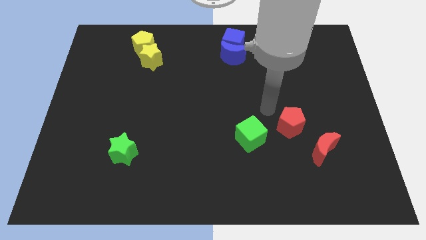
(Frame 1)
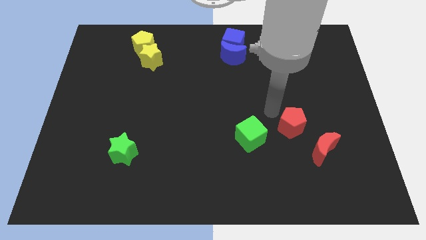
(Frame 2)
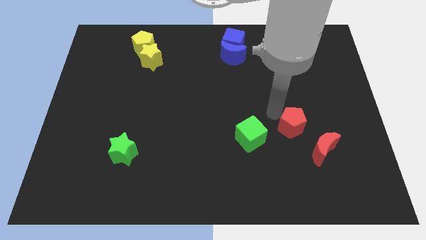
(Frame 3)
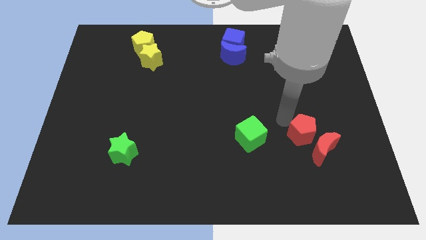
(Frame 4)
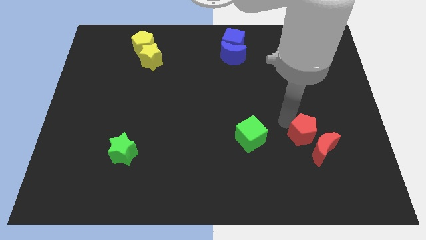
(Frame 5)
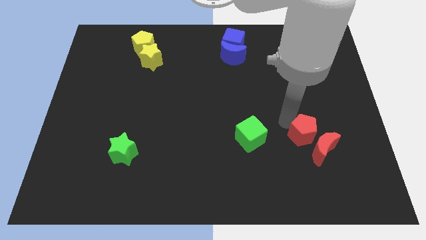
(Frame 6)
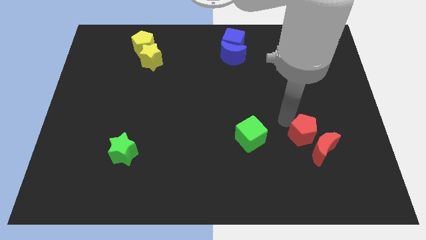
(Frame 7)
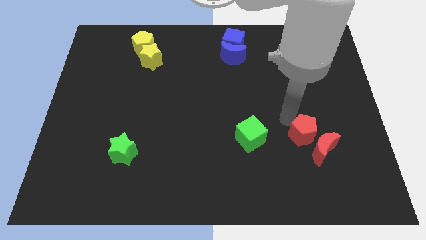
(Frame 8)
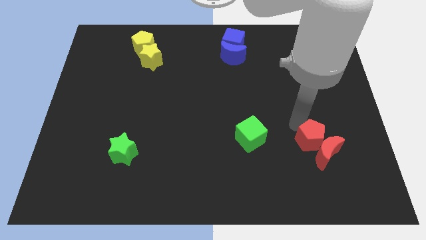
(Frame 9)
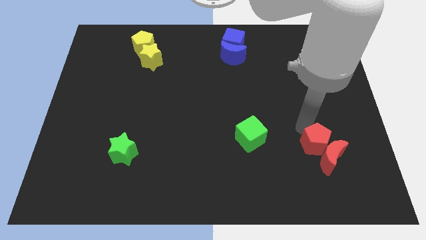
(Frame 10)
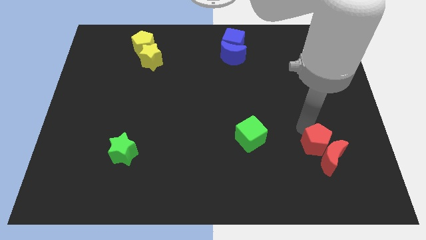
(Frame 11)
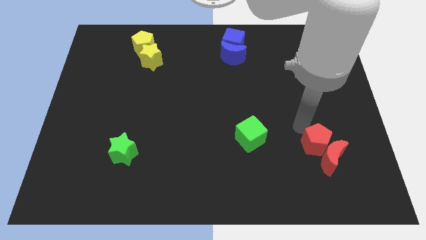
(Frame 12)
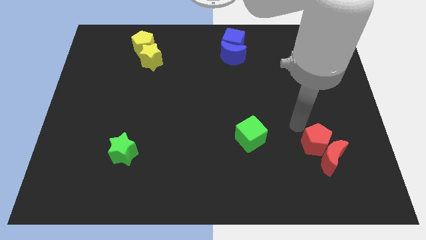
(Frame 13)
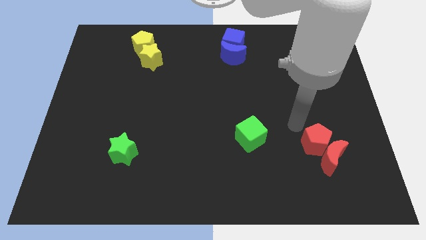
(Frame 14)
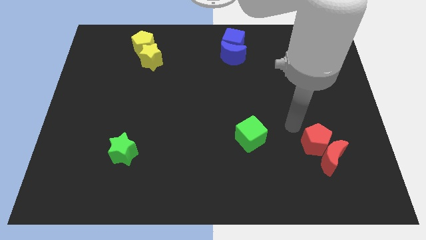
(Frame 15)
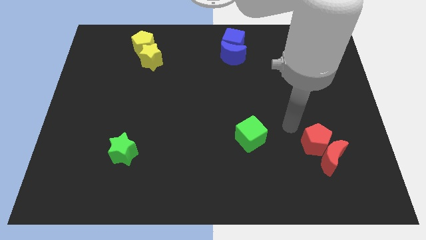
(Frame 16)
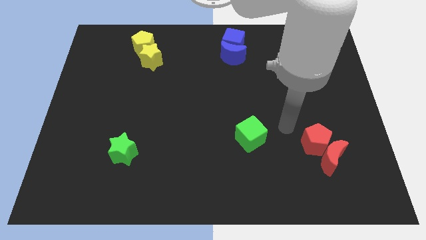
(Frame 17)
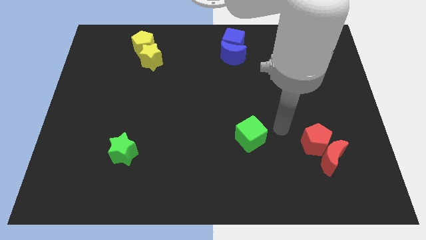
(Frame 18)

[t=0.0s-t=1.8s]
move red pentagon into the red moon

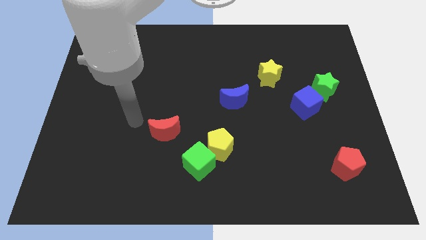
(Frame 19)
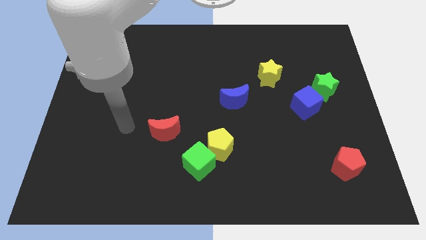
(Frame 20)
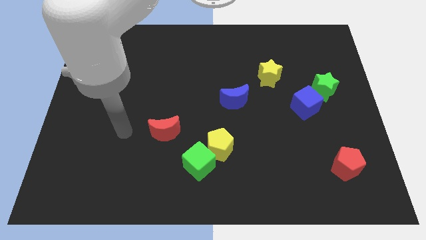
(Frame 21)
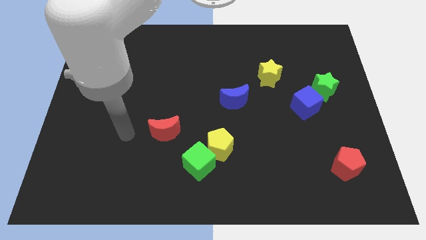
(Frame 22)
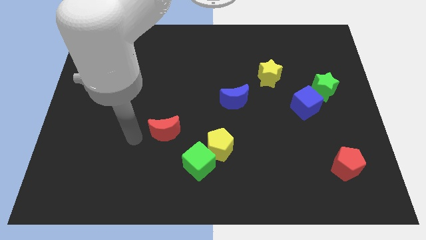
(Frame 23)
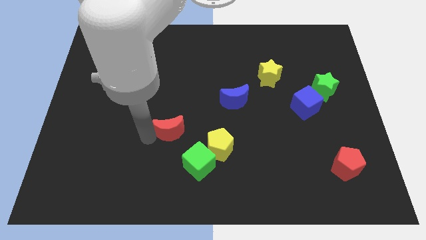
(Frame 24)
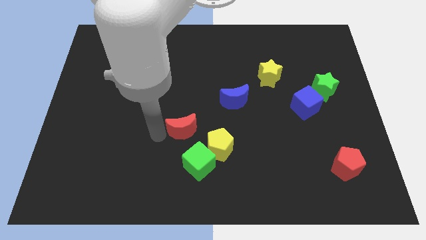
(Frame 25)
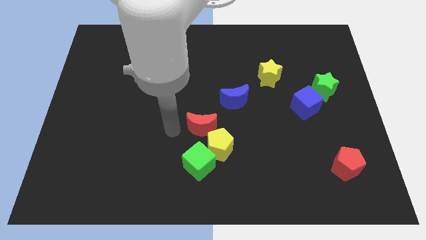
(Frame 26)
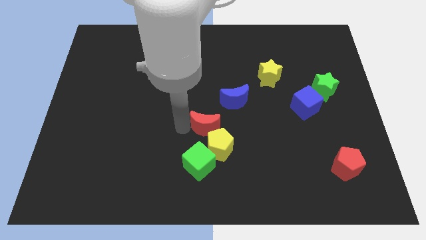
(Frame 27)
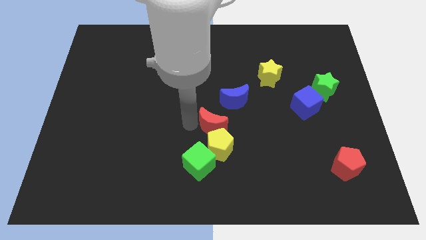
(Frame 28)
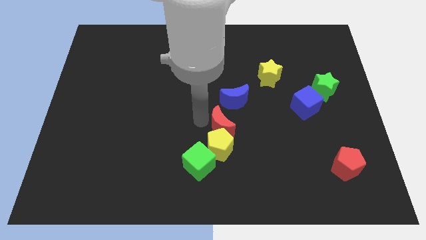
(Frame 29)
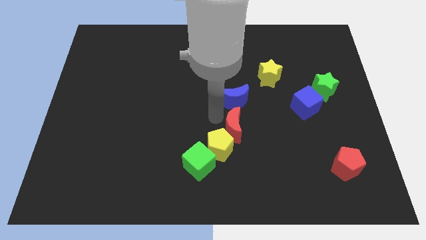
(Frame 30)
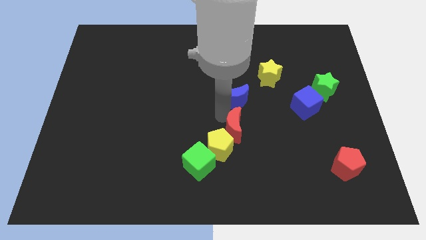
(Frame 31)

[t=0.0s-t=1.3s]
place the red moon to the bottom of the blue moon

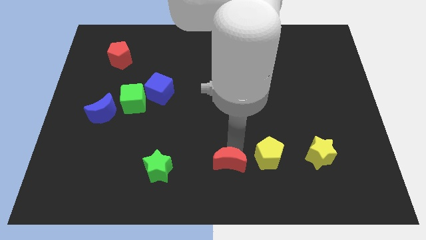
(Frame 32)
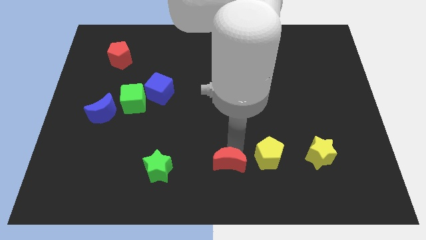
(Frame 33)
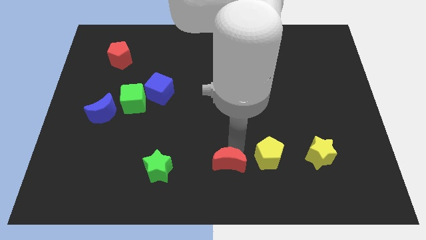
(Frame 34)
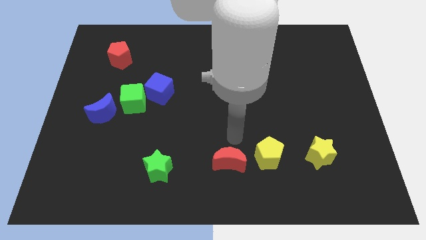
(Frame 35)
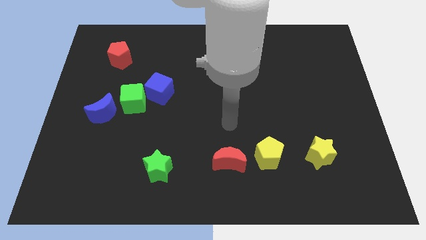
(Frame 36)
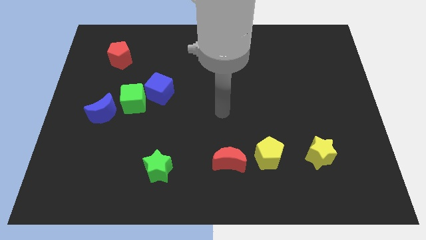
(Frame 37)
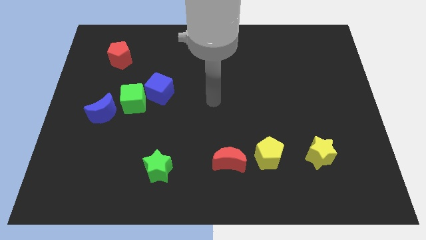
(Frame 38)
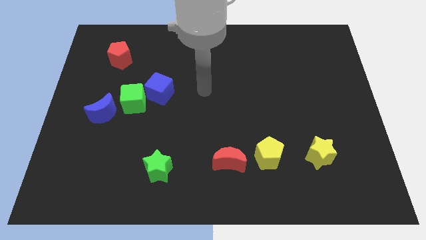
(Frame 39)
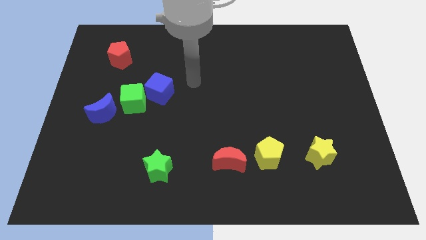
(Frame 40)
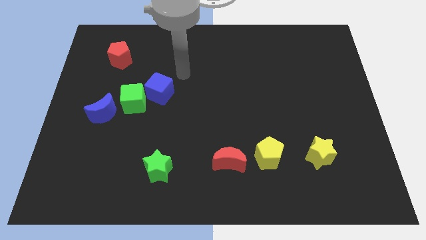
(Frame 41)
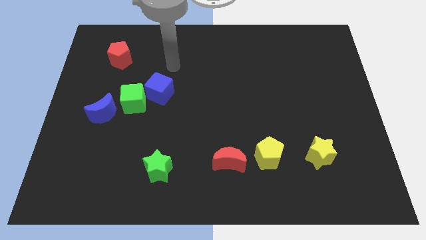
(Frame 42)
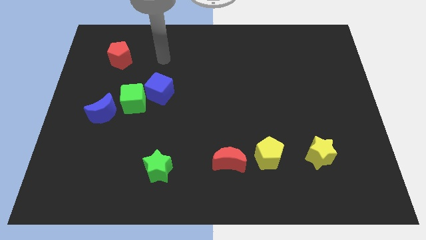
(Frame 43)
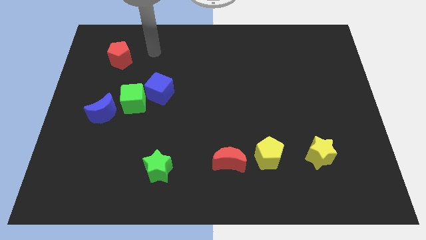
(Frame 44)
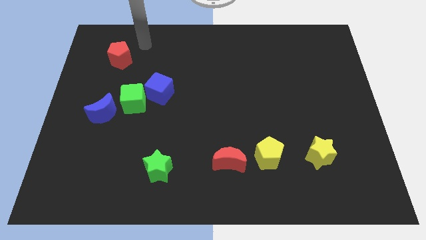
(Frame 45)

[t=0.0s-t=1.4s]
move your arm away from the red moon

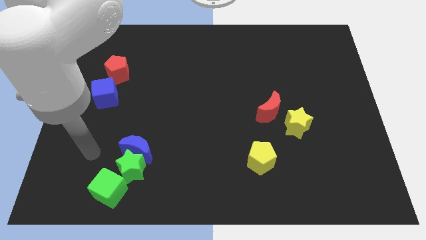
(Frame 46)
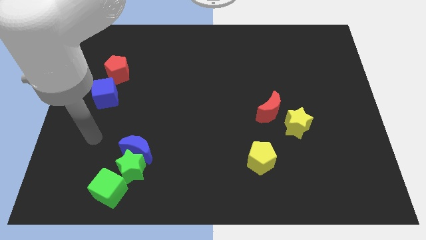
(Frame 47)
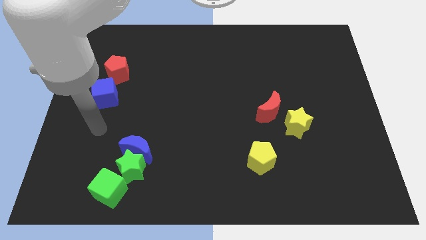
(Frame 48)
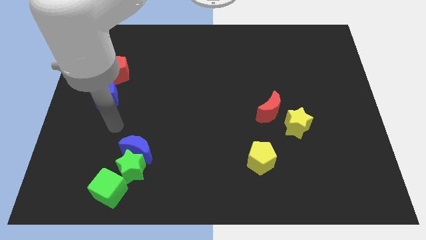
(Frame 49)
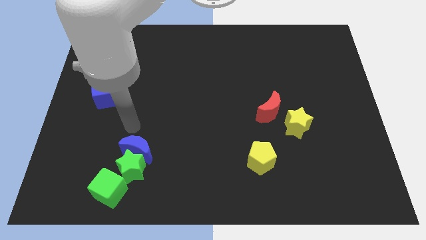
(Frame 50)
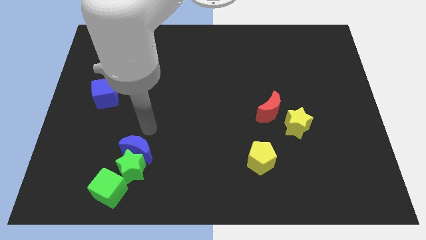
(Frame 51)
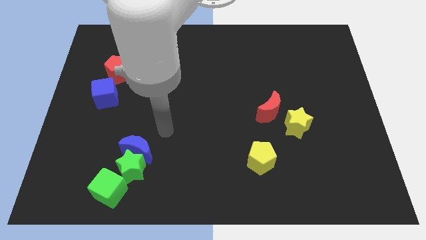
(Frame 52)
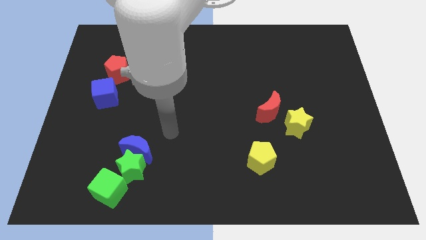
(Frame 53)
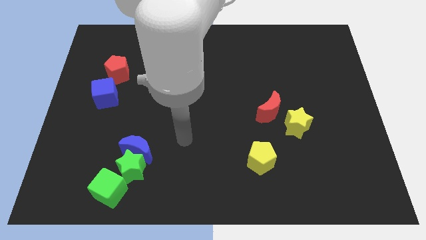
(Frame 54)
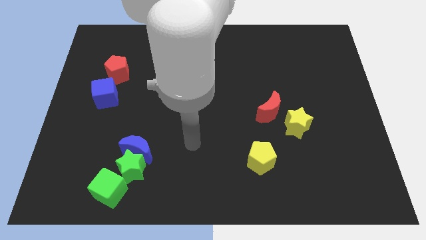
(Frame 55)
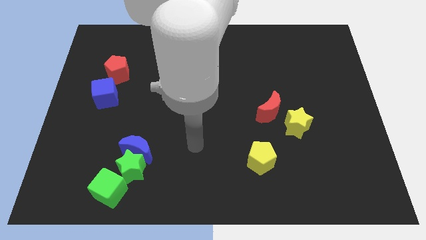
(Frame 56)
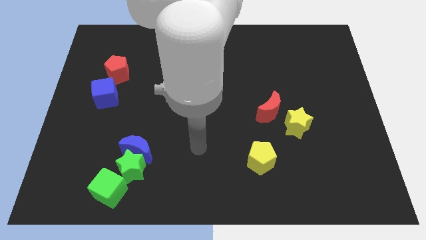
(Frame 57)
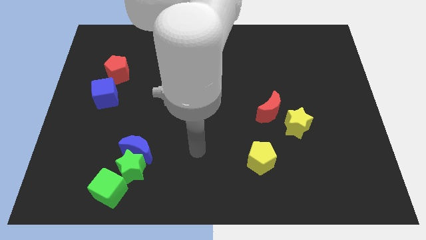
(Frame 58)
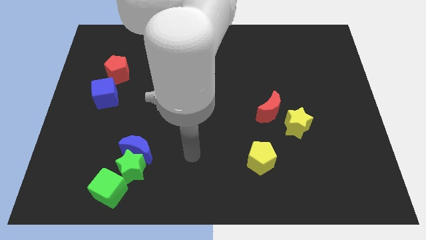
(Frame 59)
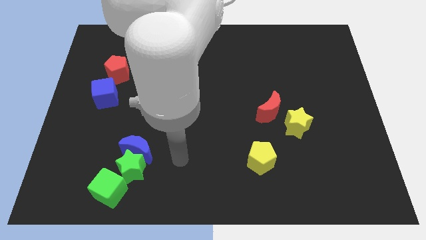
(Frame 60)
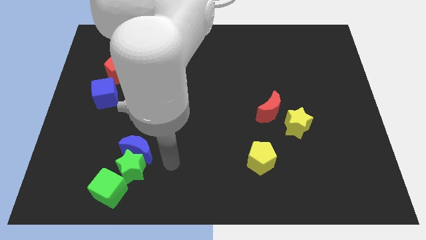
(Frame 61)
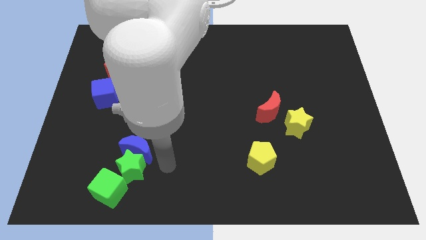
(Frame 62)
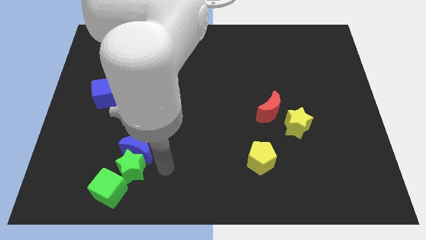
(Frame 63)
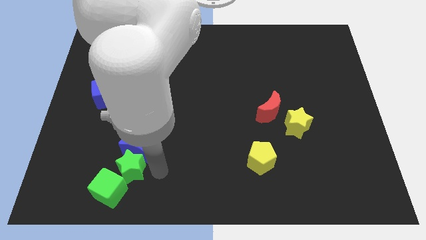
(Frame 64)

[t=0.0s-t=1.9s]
place your arm to the right side of green star

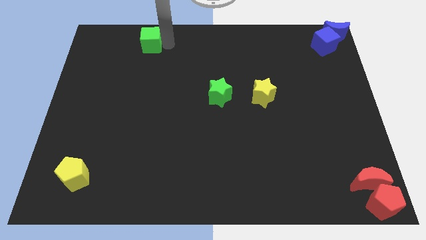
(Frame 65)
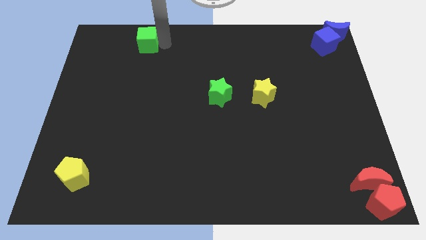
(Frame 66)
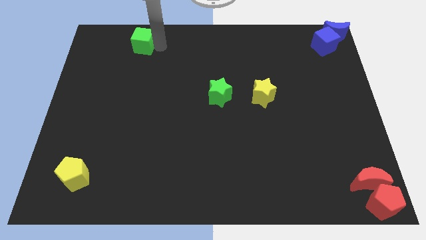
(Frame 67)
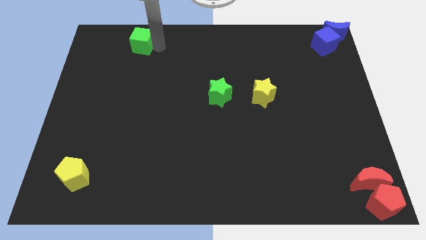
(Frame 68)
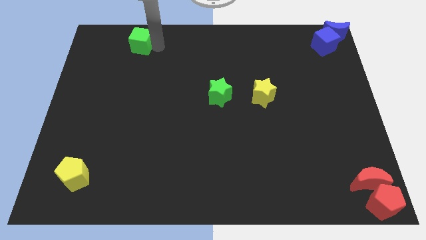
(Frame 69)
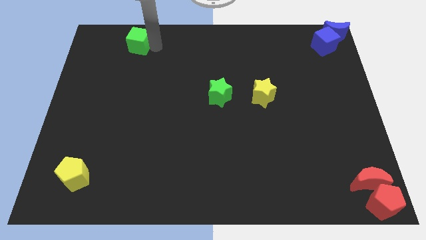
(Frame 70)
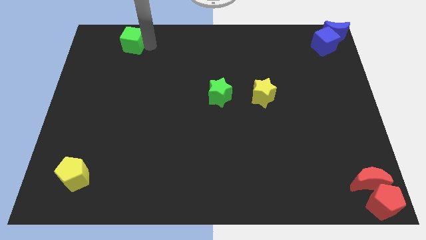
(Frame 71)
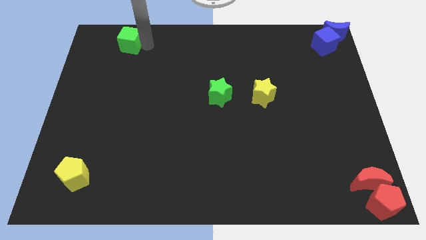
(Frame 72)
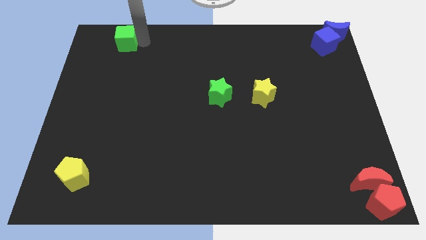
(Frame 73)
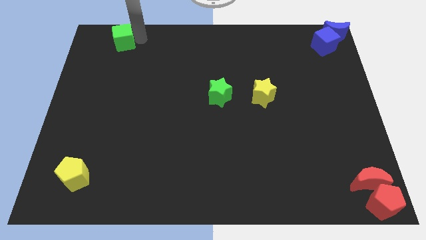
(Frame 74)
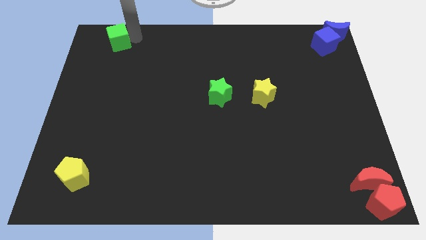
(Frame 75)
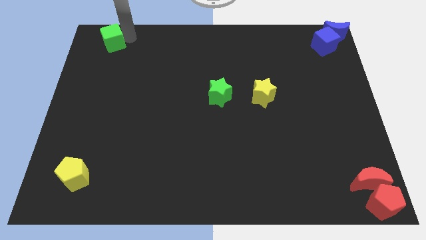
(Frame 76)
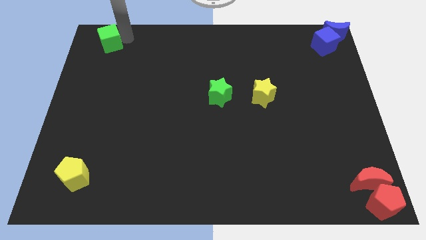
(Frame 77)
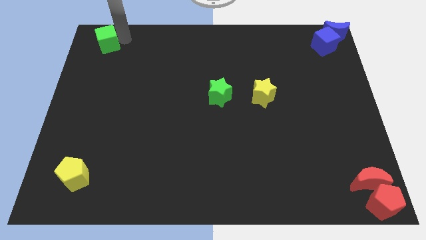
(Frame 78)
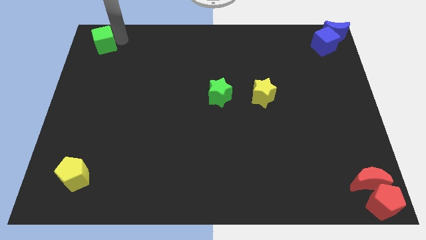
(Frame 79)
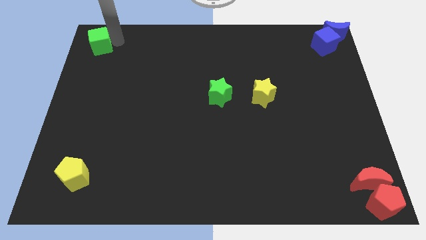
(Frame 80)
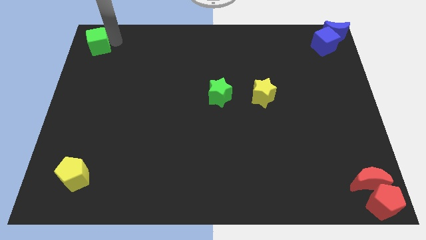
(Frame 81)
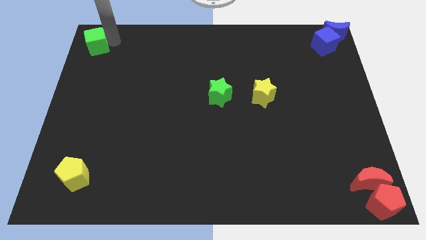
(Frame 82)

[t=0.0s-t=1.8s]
push the green cube to the top left to the board

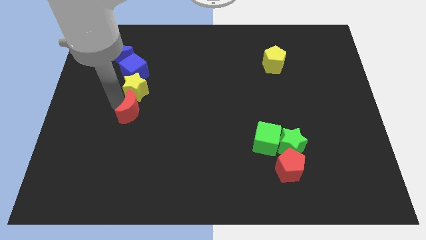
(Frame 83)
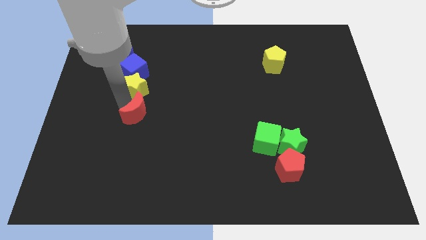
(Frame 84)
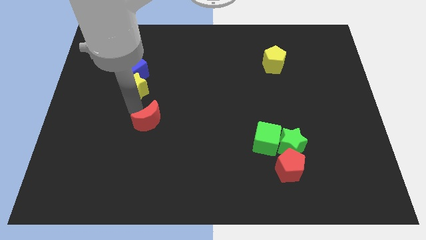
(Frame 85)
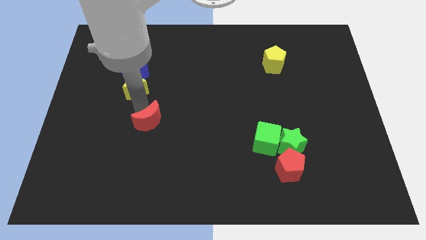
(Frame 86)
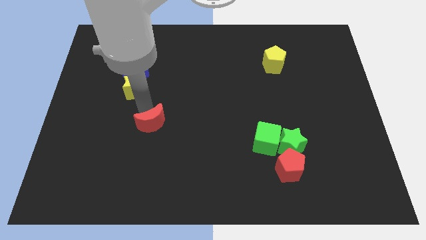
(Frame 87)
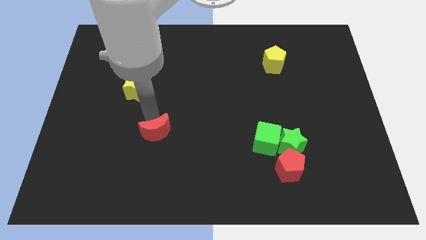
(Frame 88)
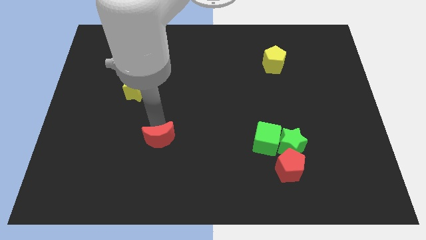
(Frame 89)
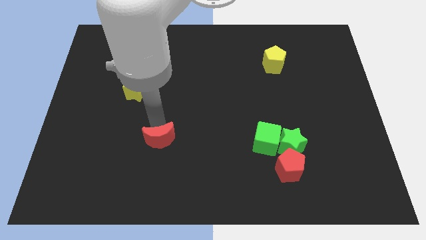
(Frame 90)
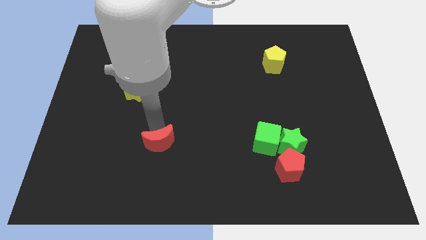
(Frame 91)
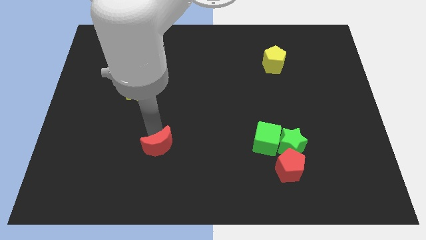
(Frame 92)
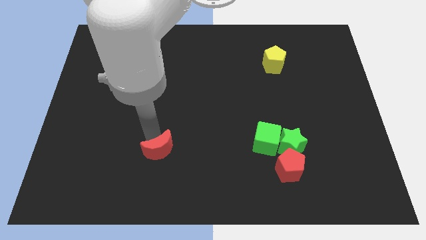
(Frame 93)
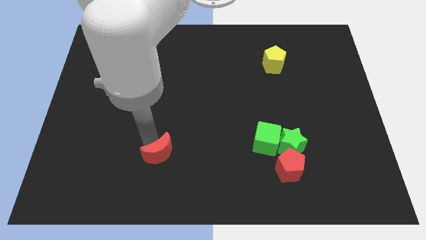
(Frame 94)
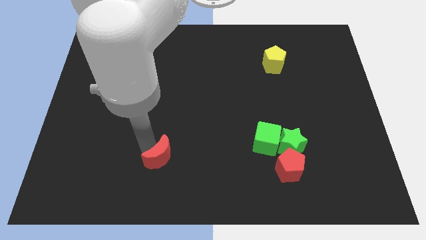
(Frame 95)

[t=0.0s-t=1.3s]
drag red moon towards the bottom center of the board
